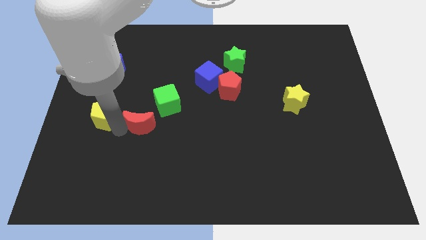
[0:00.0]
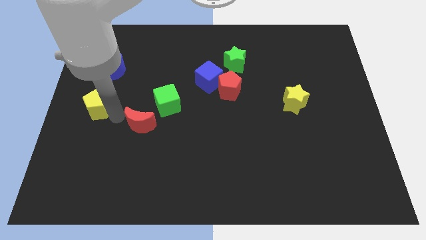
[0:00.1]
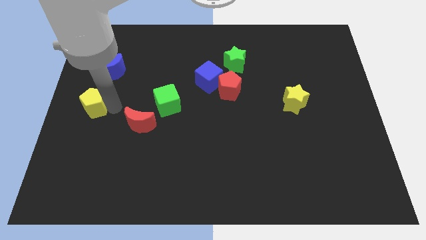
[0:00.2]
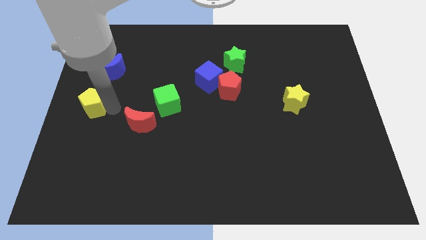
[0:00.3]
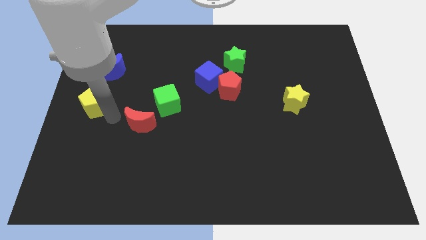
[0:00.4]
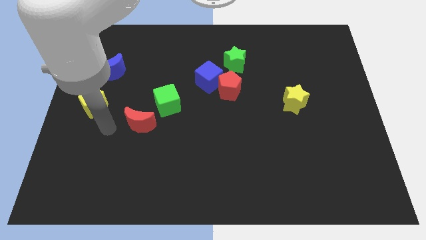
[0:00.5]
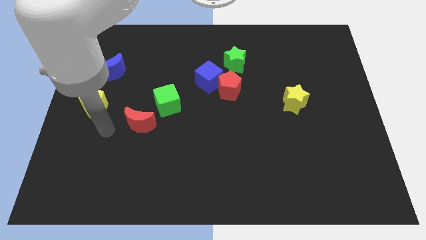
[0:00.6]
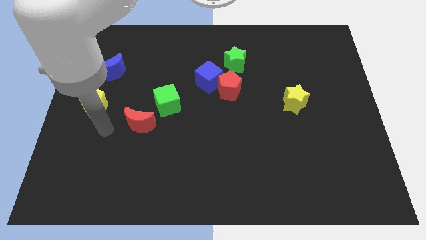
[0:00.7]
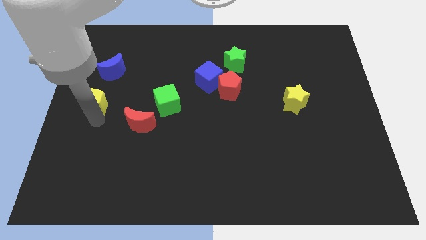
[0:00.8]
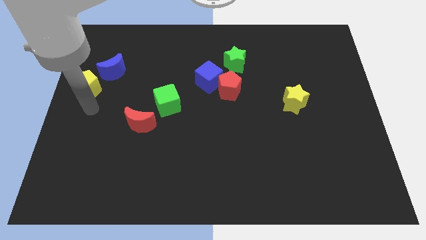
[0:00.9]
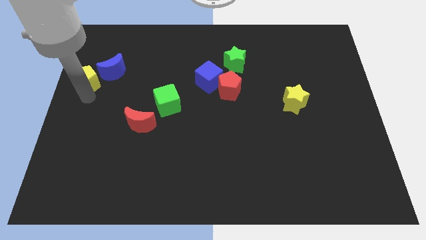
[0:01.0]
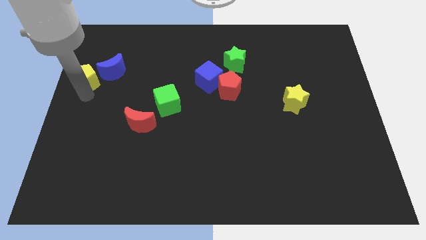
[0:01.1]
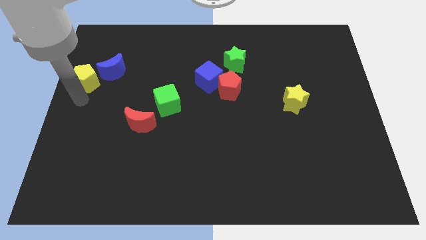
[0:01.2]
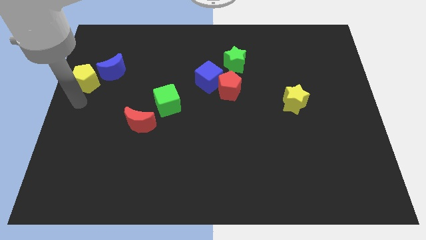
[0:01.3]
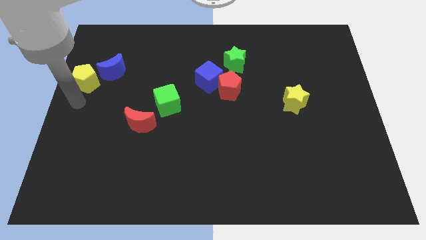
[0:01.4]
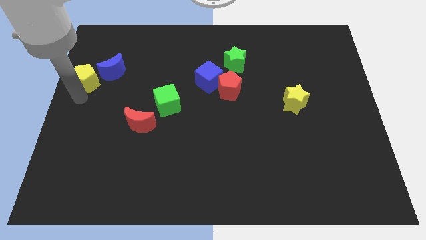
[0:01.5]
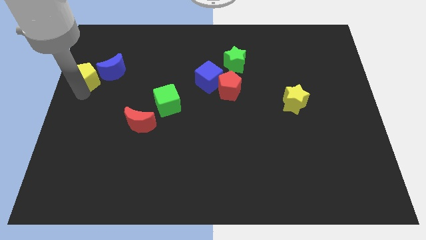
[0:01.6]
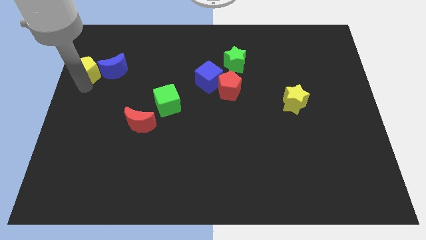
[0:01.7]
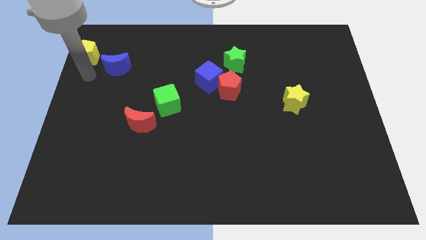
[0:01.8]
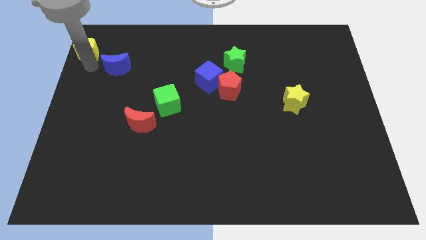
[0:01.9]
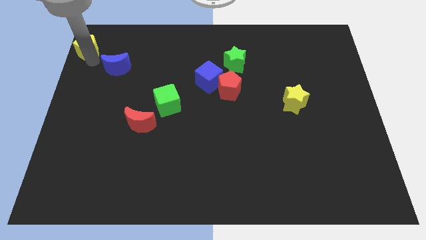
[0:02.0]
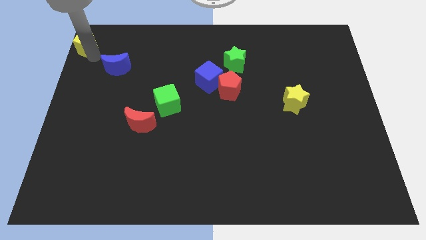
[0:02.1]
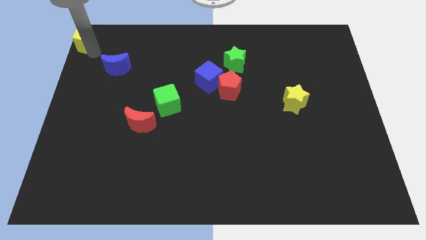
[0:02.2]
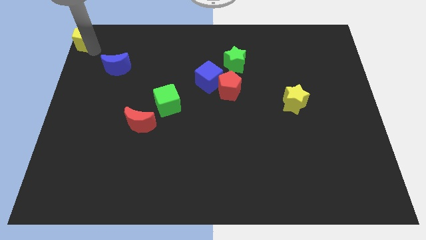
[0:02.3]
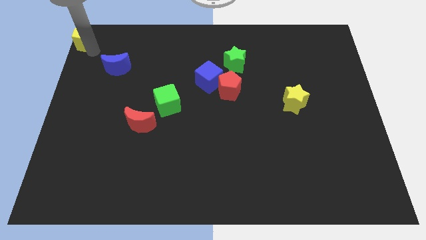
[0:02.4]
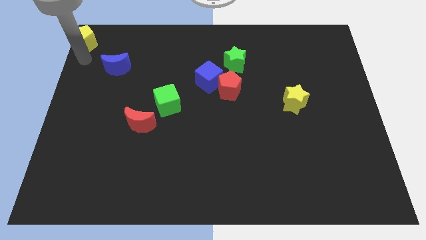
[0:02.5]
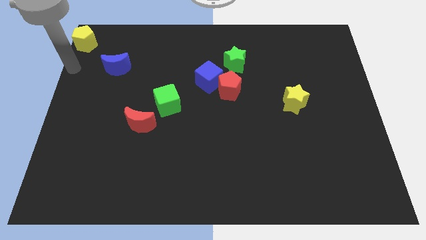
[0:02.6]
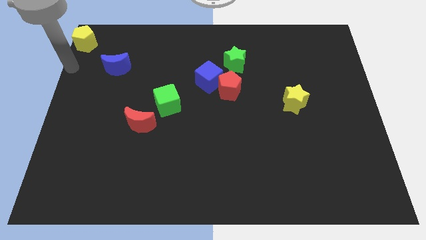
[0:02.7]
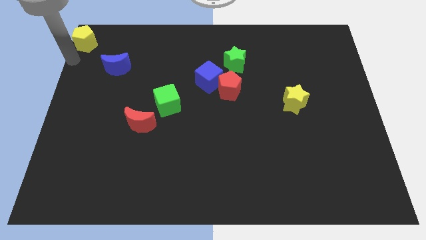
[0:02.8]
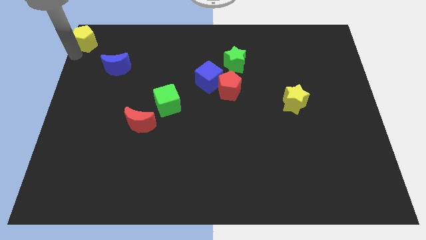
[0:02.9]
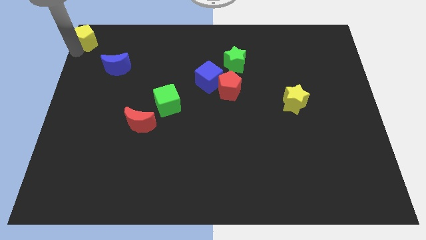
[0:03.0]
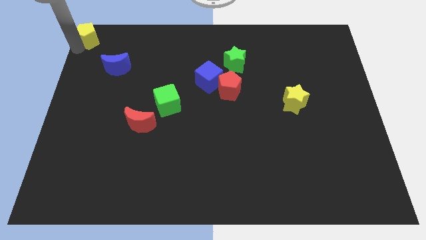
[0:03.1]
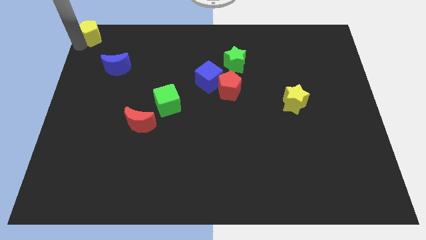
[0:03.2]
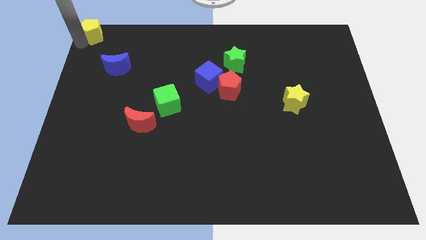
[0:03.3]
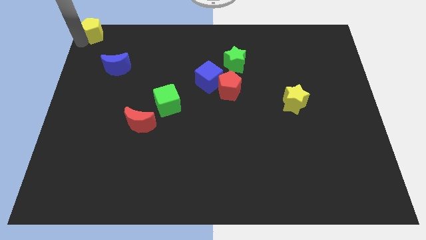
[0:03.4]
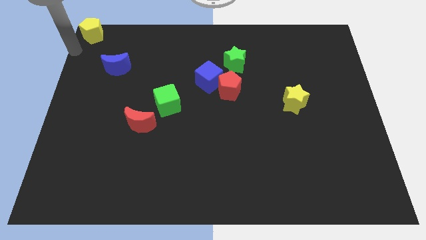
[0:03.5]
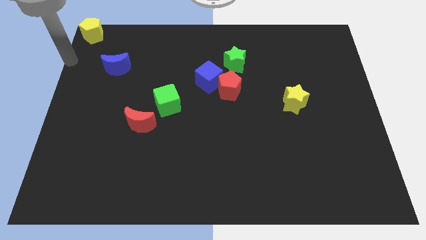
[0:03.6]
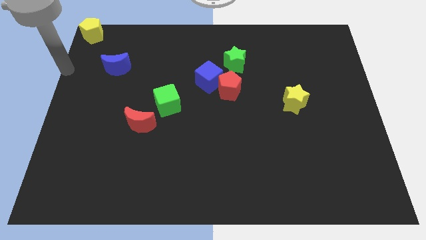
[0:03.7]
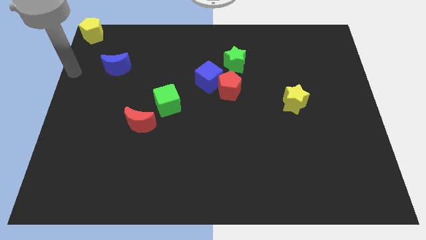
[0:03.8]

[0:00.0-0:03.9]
place the yellow pentagon at the top left corner of the board

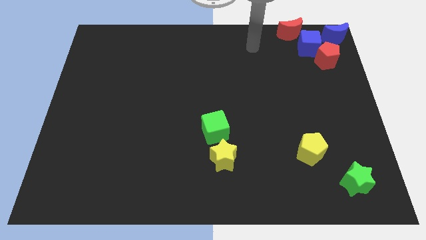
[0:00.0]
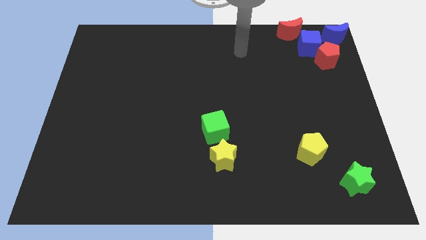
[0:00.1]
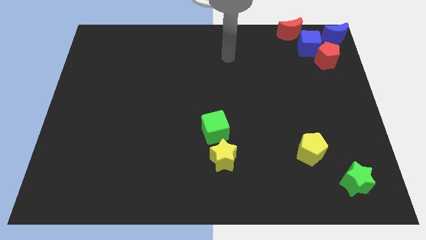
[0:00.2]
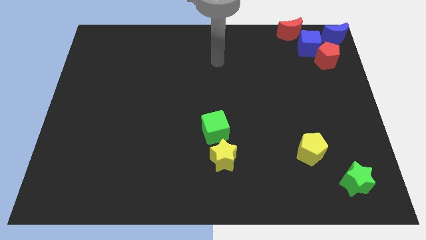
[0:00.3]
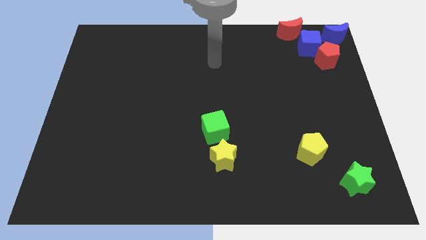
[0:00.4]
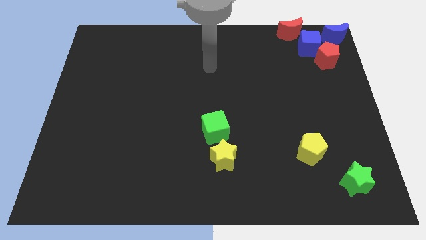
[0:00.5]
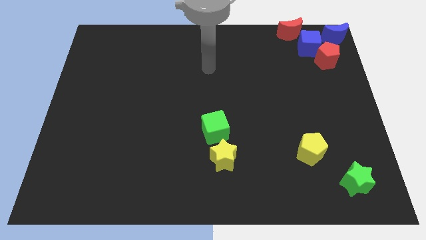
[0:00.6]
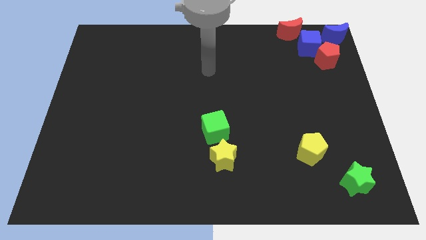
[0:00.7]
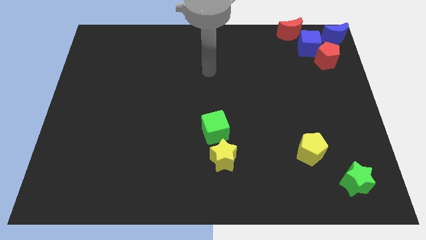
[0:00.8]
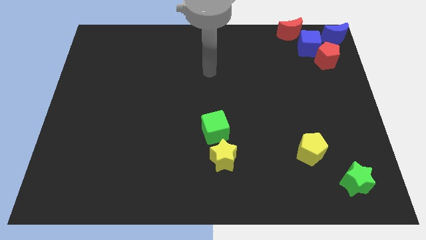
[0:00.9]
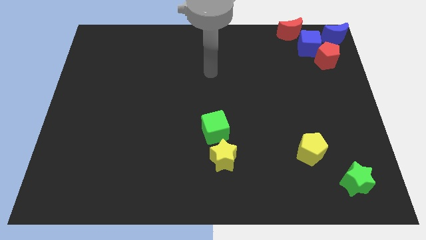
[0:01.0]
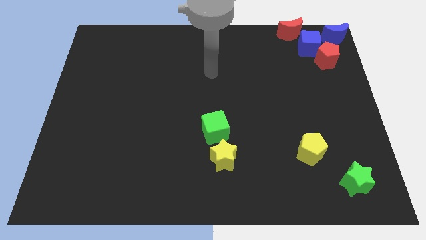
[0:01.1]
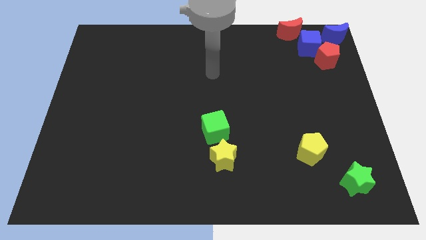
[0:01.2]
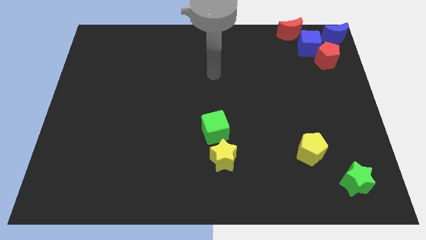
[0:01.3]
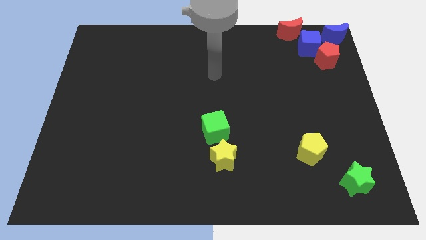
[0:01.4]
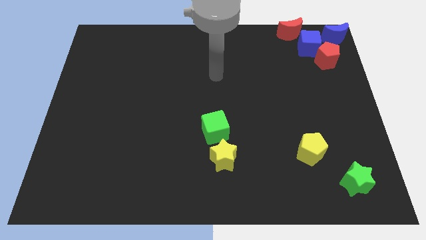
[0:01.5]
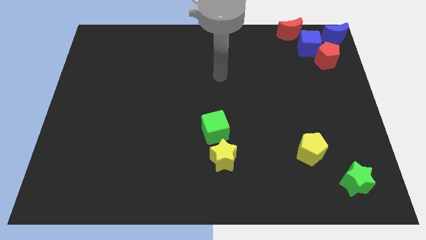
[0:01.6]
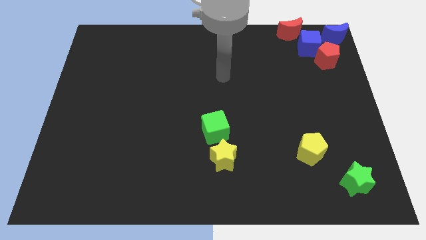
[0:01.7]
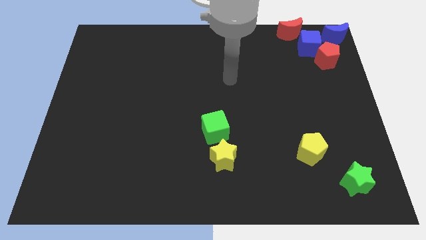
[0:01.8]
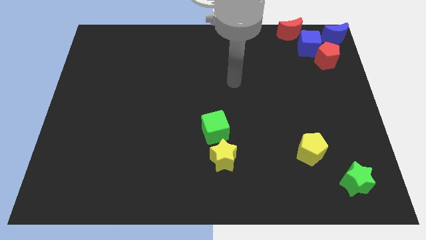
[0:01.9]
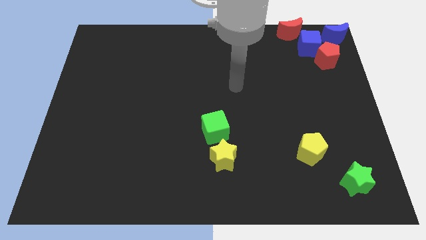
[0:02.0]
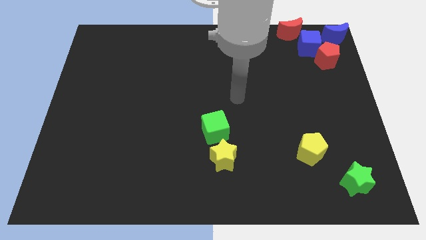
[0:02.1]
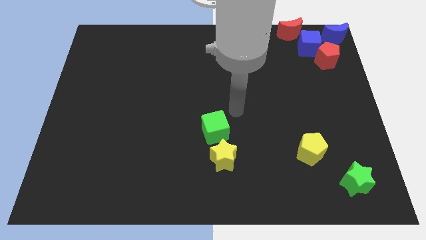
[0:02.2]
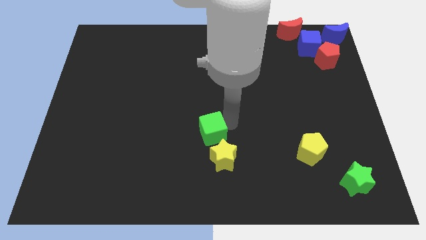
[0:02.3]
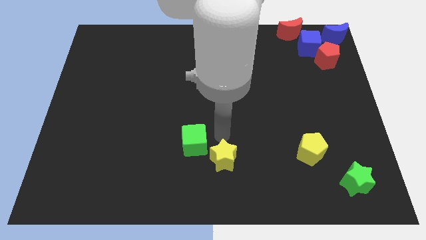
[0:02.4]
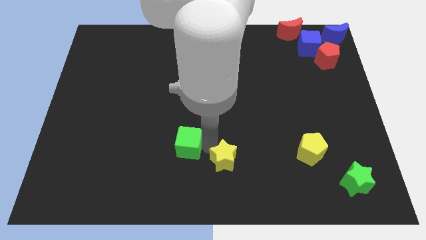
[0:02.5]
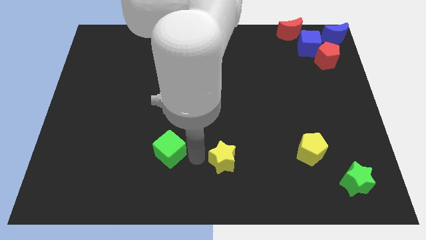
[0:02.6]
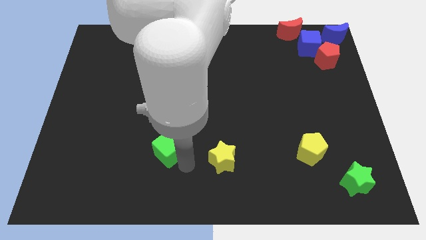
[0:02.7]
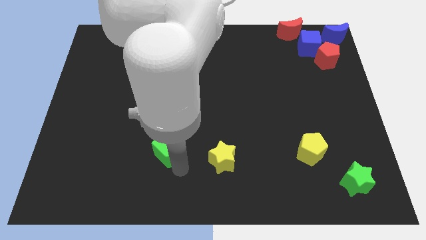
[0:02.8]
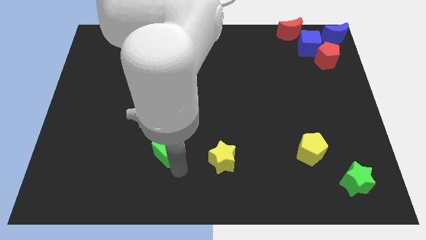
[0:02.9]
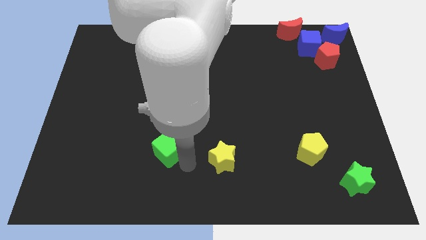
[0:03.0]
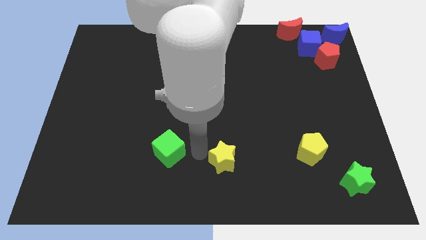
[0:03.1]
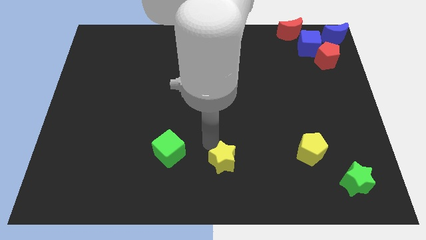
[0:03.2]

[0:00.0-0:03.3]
push the green cube to the left side of the yellow star

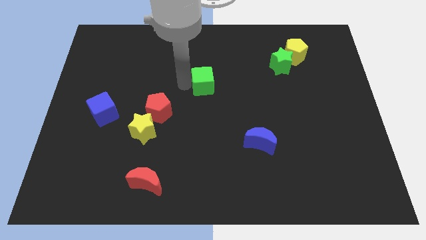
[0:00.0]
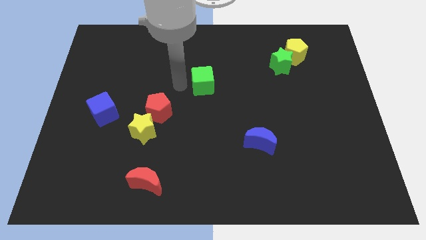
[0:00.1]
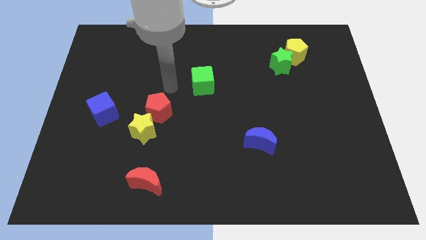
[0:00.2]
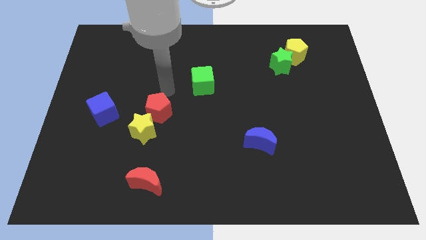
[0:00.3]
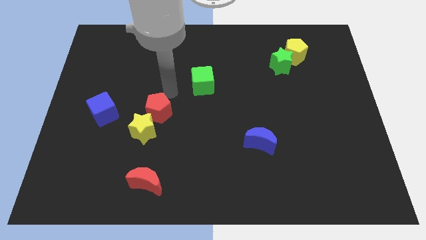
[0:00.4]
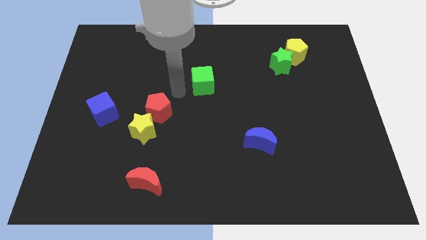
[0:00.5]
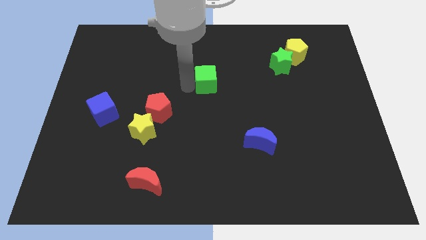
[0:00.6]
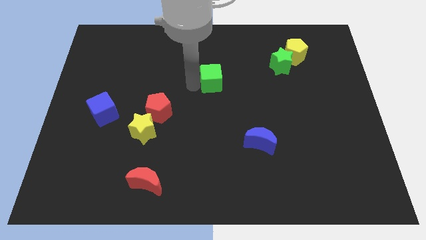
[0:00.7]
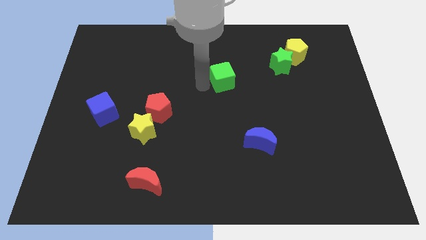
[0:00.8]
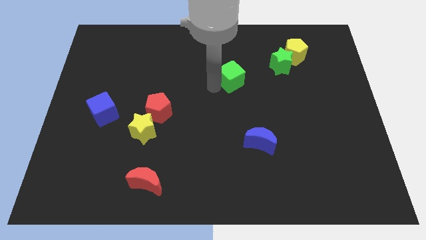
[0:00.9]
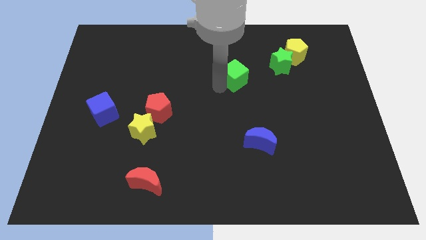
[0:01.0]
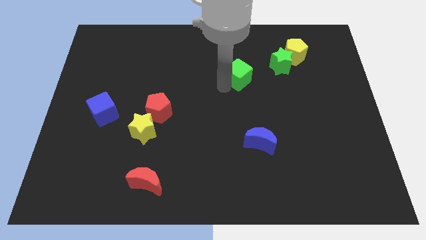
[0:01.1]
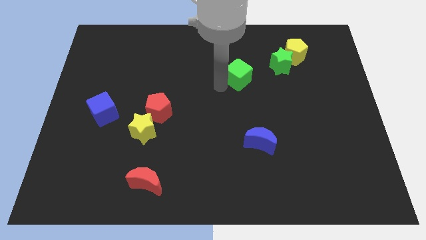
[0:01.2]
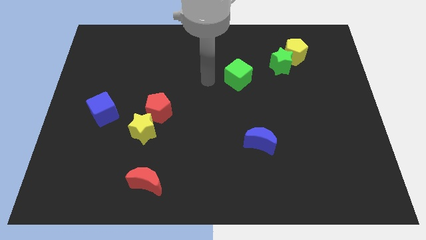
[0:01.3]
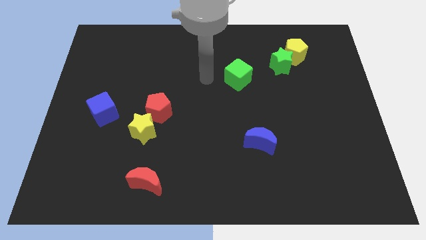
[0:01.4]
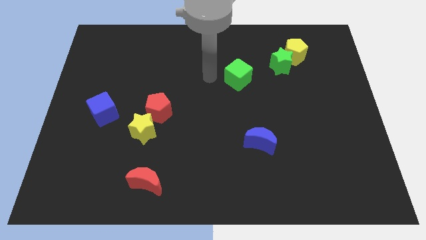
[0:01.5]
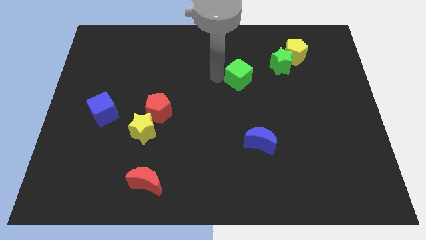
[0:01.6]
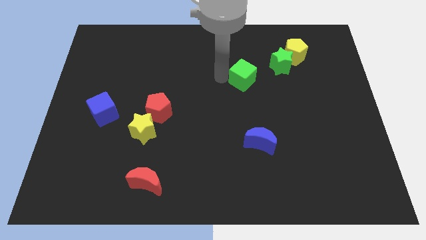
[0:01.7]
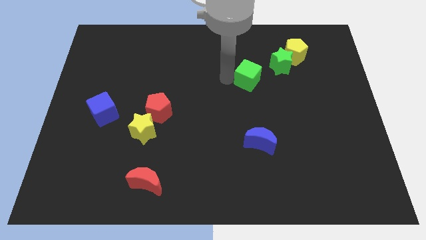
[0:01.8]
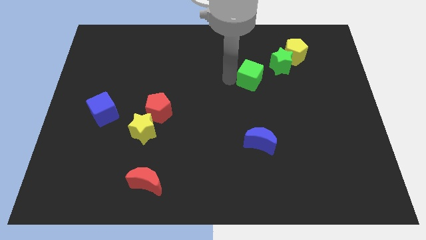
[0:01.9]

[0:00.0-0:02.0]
move the green cube closer to the green star
